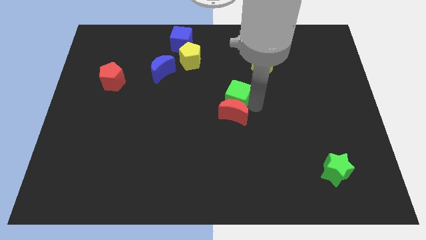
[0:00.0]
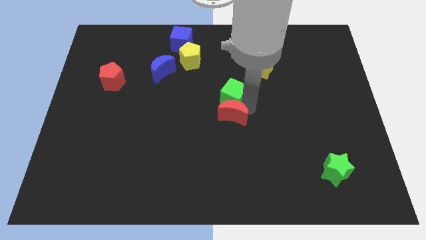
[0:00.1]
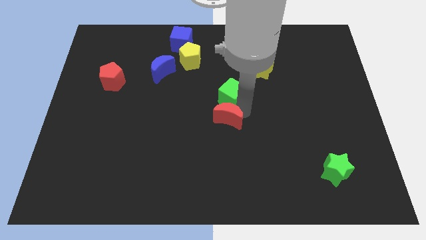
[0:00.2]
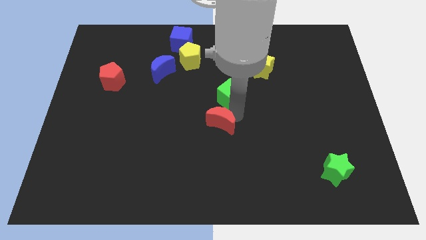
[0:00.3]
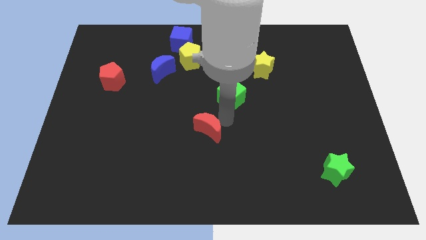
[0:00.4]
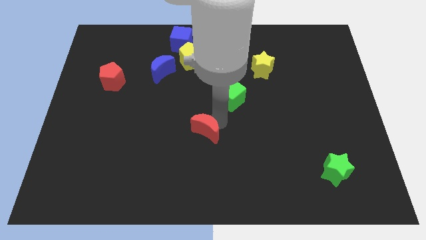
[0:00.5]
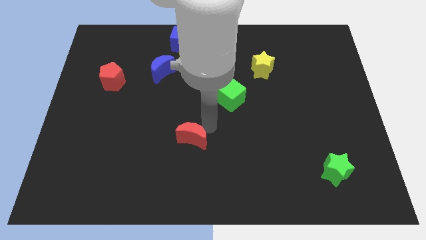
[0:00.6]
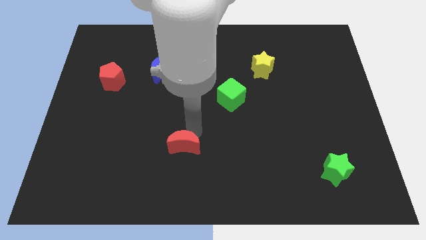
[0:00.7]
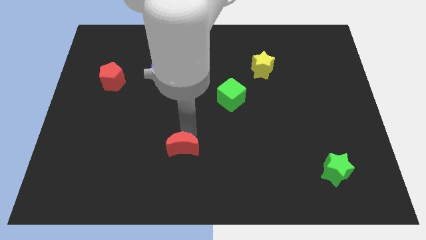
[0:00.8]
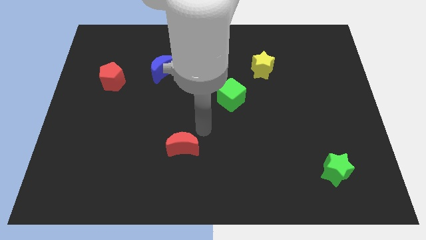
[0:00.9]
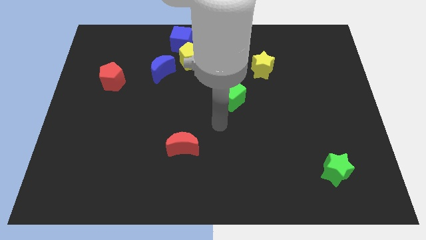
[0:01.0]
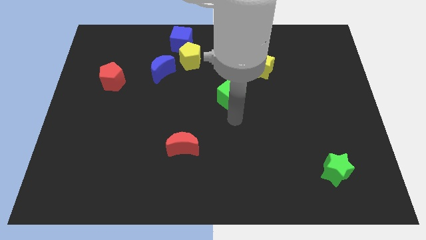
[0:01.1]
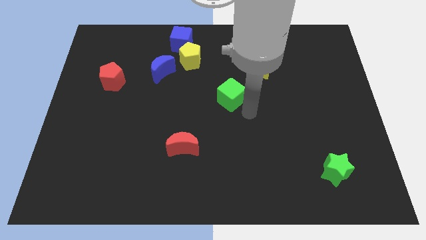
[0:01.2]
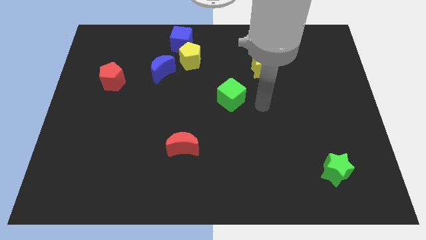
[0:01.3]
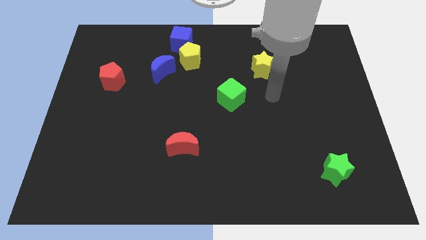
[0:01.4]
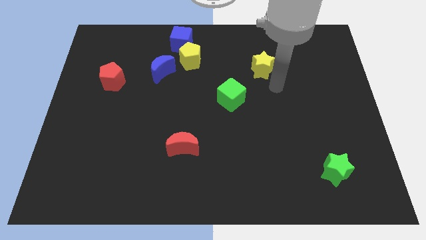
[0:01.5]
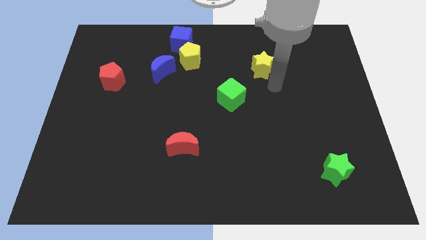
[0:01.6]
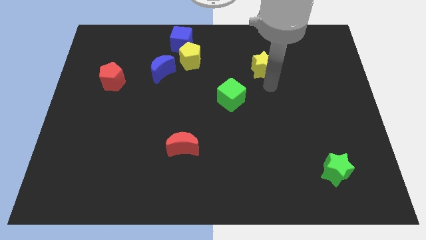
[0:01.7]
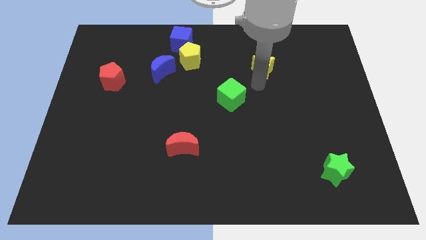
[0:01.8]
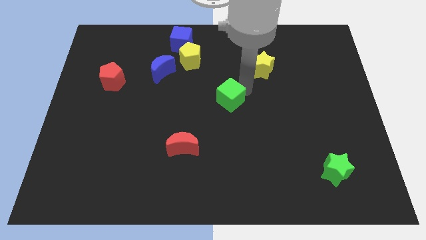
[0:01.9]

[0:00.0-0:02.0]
push red crescent away from green cube

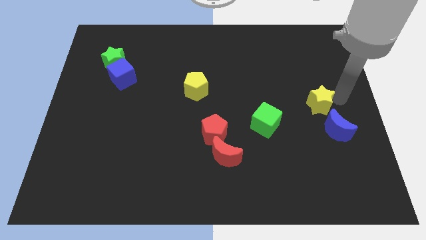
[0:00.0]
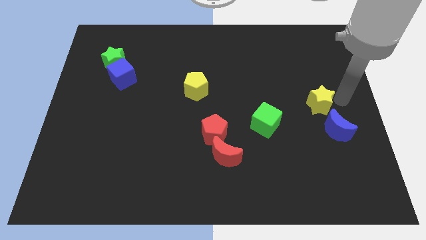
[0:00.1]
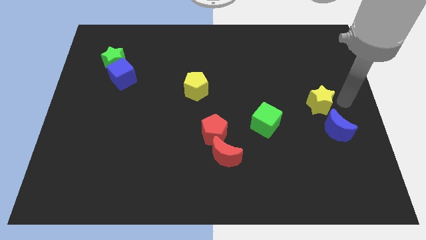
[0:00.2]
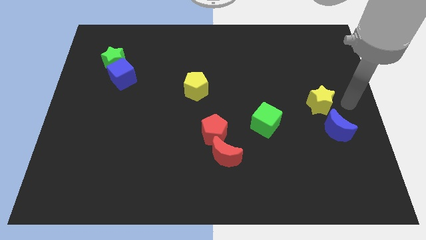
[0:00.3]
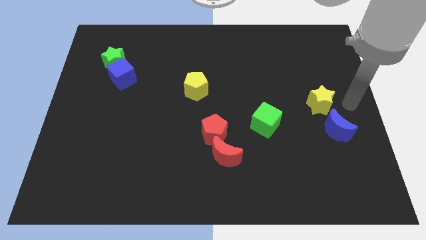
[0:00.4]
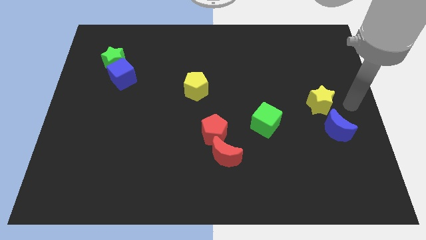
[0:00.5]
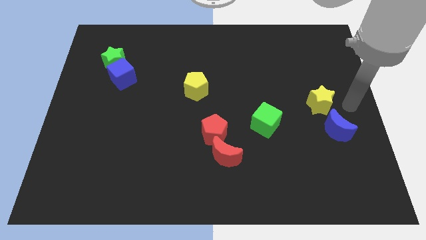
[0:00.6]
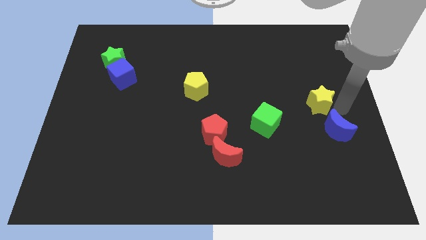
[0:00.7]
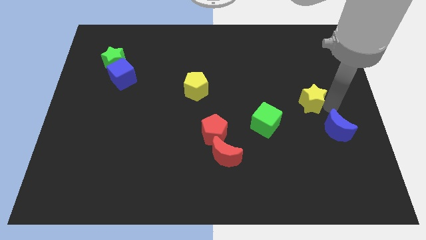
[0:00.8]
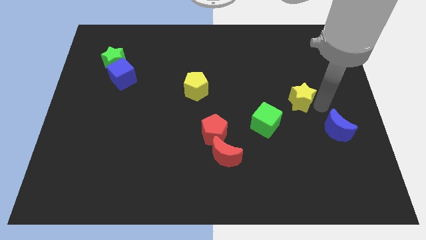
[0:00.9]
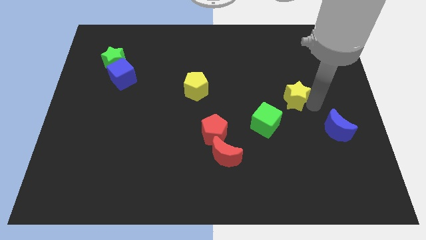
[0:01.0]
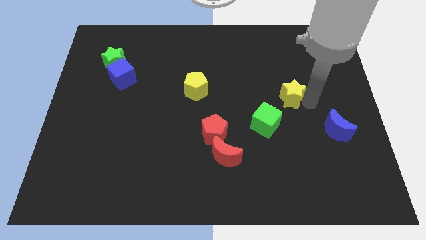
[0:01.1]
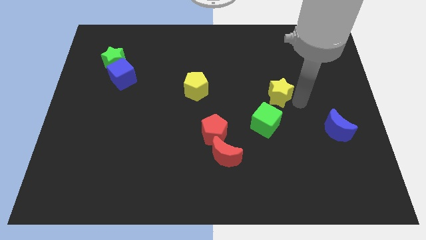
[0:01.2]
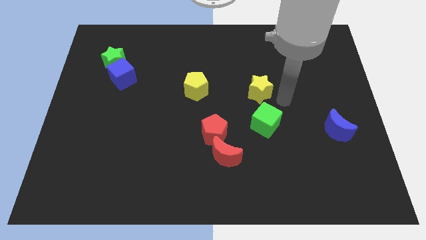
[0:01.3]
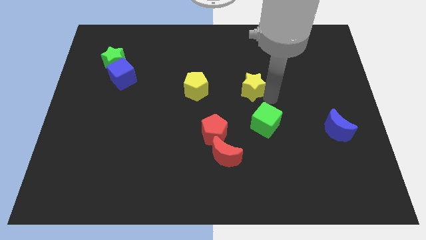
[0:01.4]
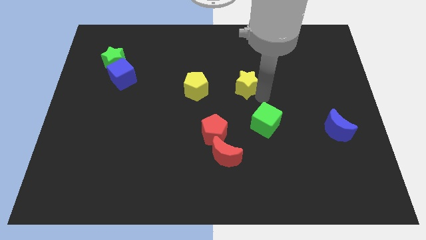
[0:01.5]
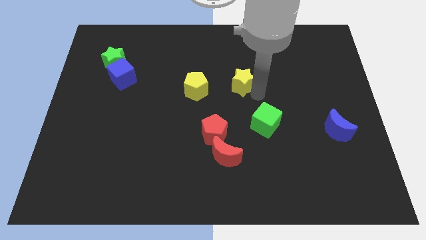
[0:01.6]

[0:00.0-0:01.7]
push the yellow star to the right of the yellow pentagon

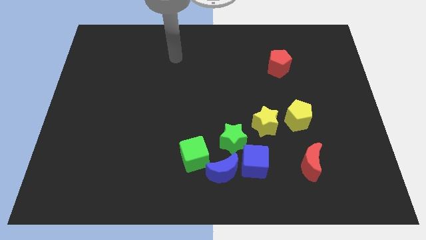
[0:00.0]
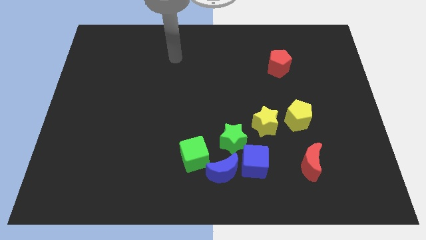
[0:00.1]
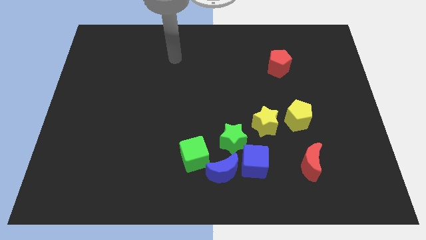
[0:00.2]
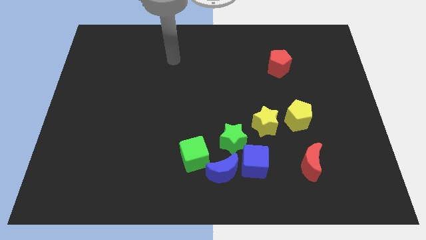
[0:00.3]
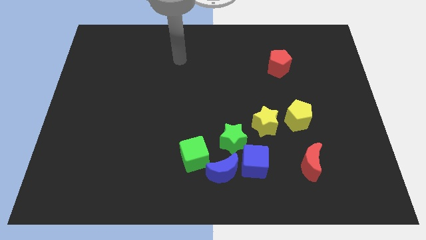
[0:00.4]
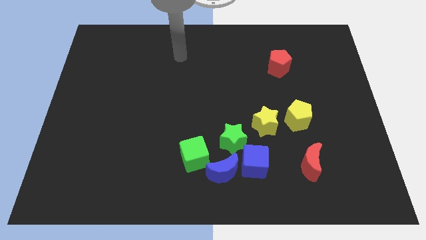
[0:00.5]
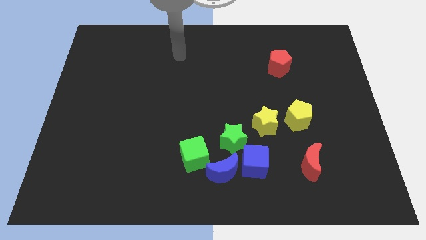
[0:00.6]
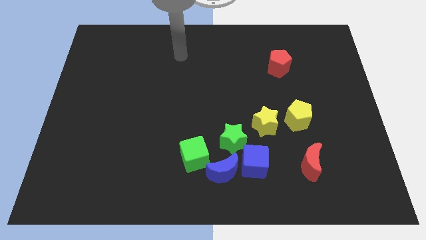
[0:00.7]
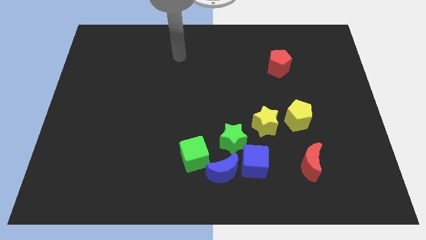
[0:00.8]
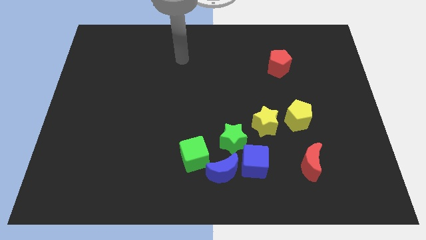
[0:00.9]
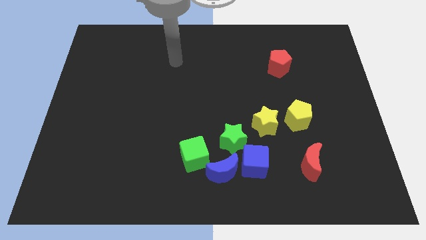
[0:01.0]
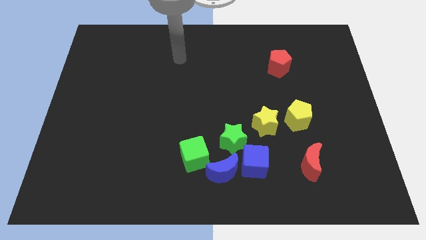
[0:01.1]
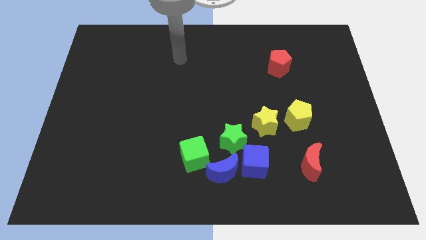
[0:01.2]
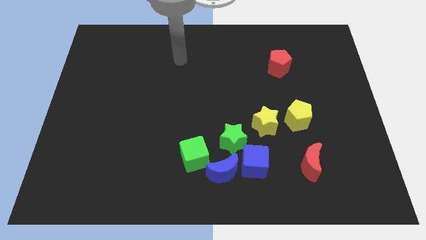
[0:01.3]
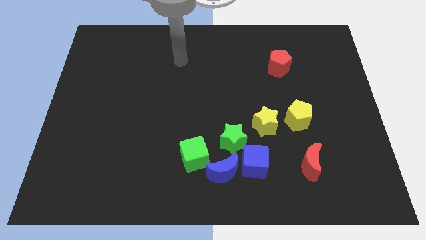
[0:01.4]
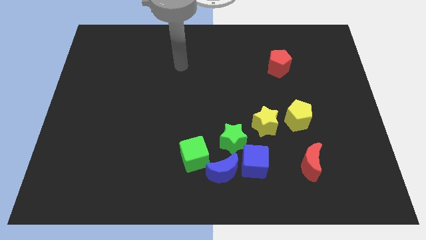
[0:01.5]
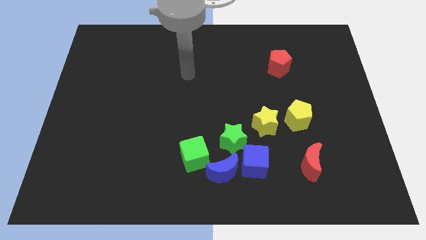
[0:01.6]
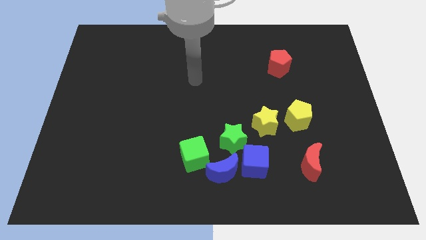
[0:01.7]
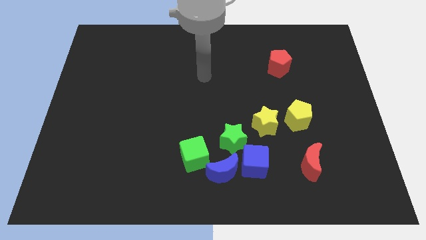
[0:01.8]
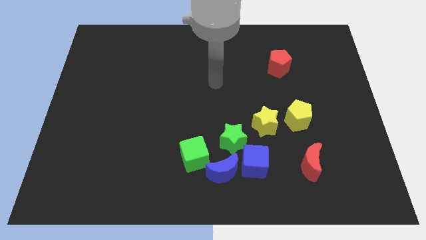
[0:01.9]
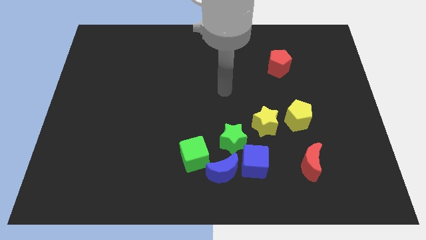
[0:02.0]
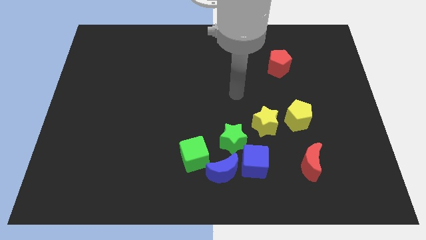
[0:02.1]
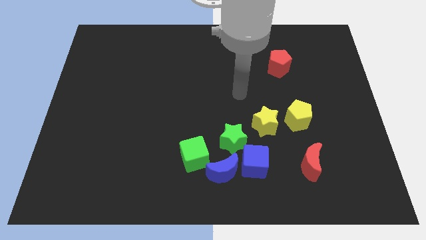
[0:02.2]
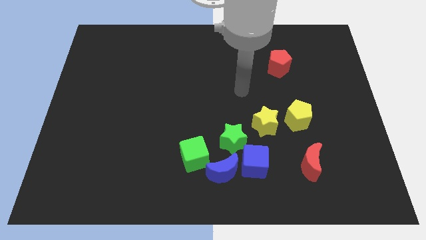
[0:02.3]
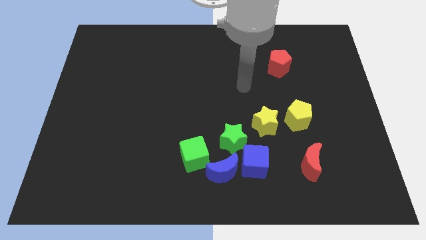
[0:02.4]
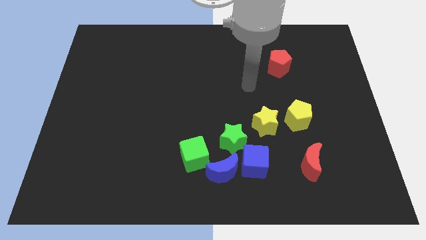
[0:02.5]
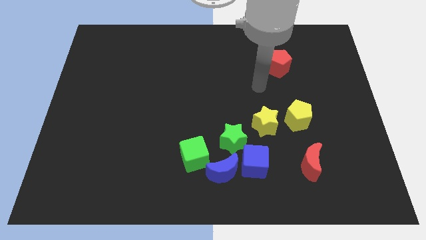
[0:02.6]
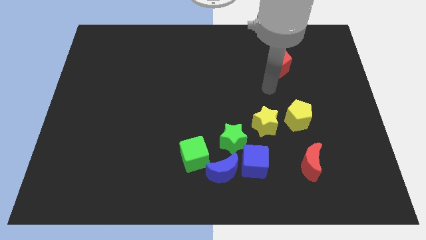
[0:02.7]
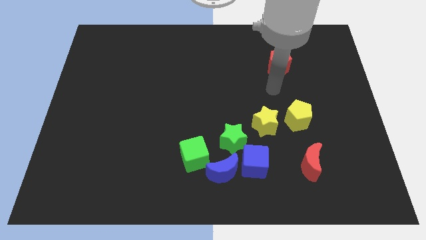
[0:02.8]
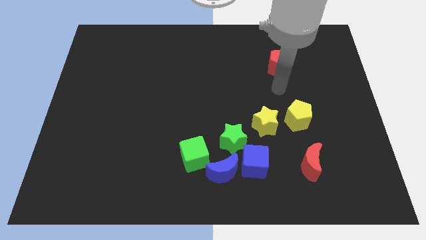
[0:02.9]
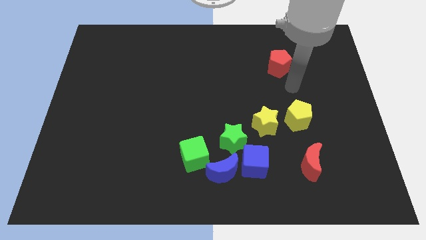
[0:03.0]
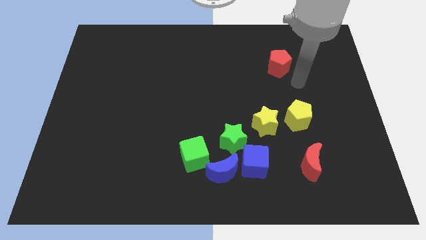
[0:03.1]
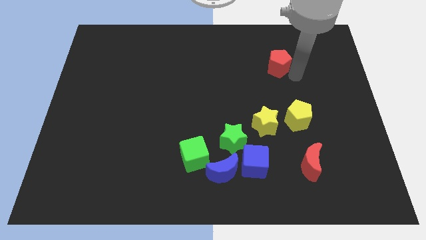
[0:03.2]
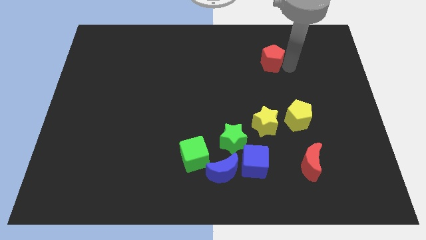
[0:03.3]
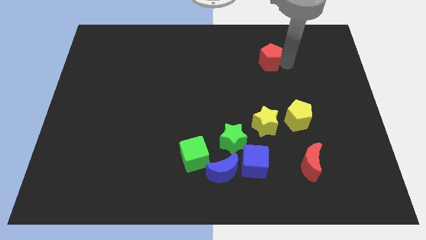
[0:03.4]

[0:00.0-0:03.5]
move the arm towards the red pentagon

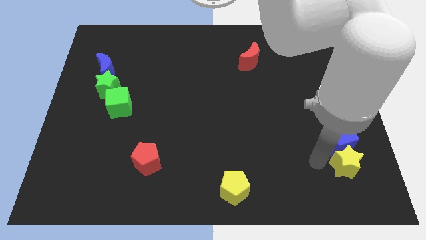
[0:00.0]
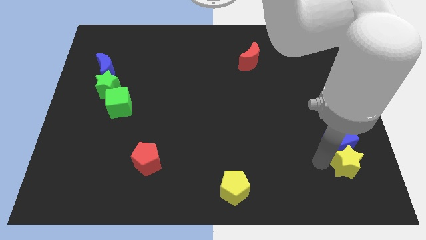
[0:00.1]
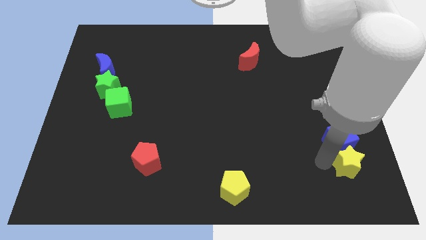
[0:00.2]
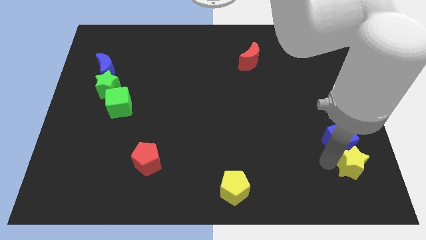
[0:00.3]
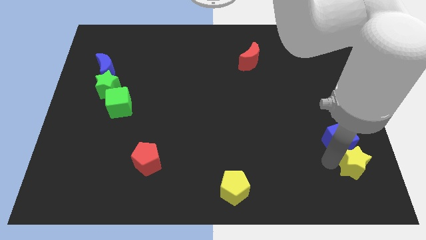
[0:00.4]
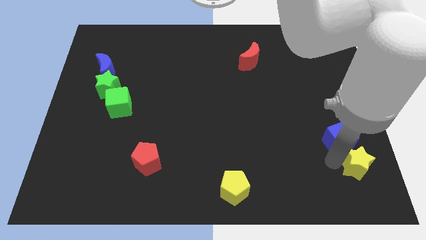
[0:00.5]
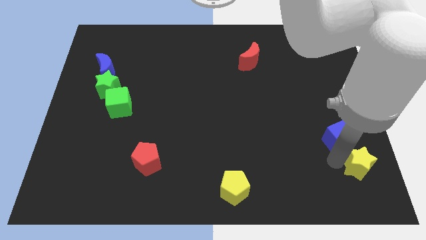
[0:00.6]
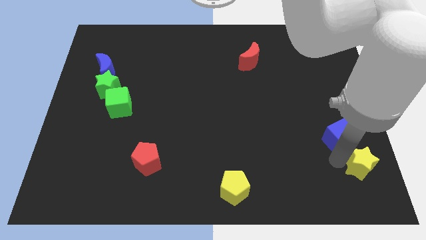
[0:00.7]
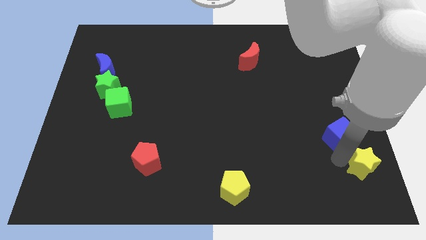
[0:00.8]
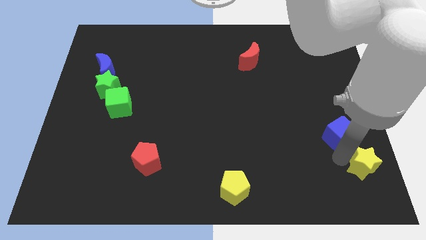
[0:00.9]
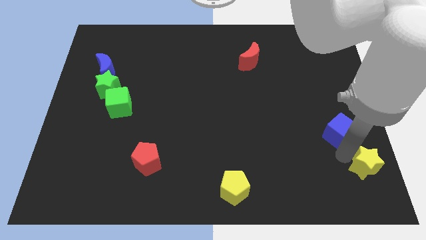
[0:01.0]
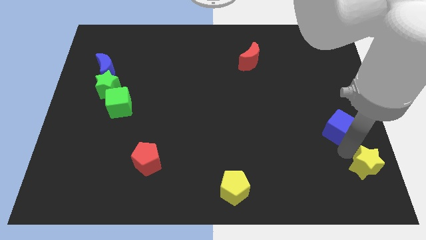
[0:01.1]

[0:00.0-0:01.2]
separate the blue cube away from the yellow star

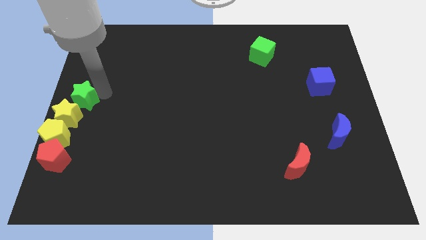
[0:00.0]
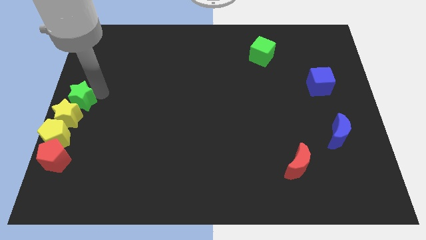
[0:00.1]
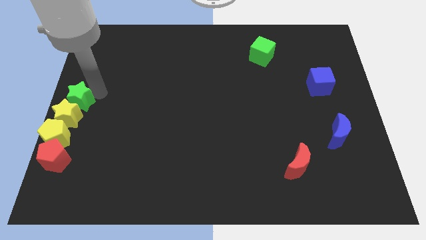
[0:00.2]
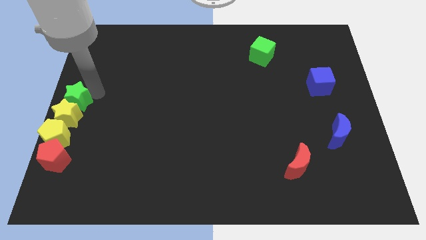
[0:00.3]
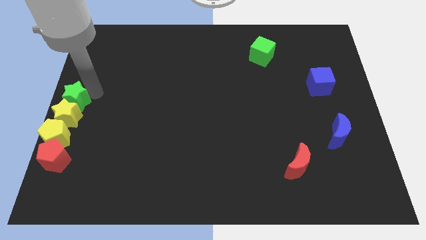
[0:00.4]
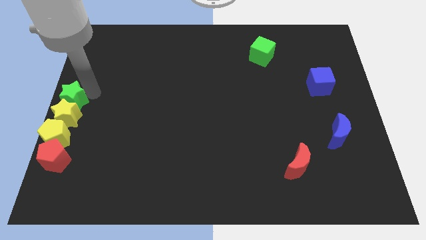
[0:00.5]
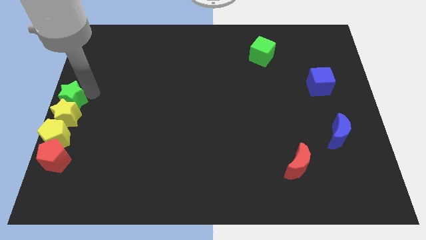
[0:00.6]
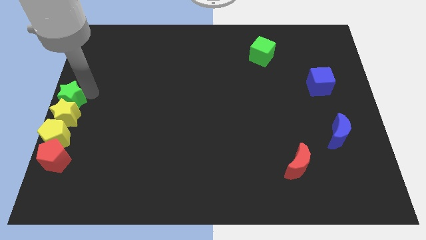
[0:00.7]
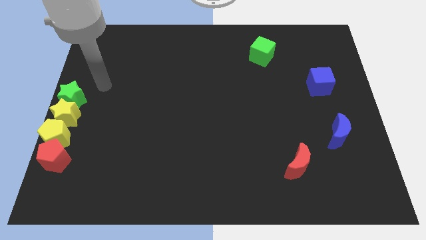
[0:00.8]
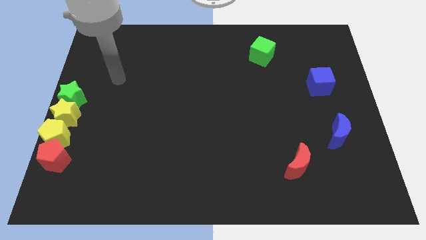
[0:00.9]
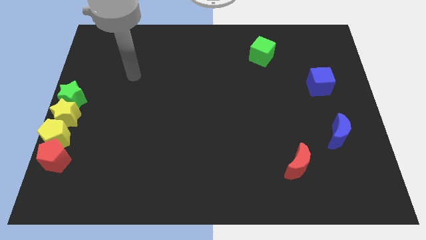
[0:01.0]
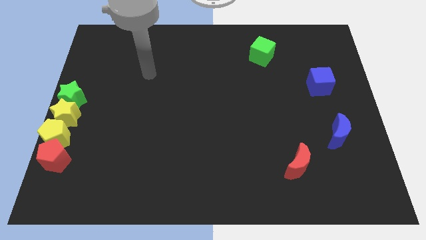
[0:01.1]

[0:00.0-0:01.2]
move green star above yellow star
